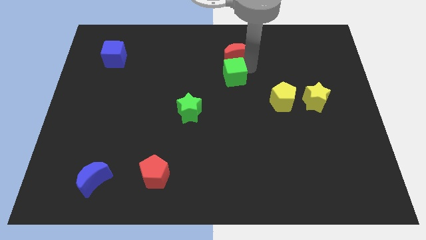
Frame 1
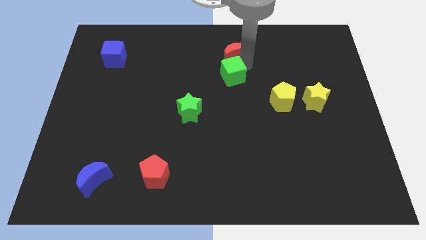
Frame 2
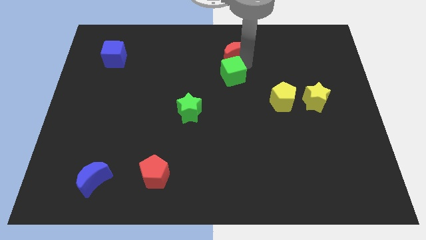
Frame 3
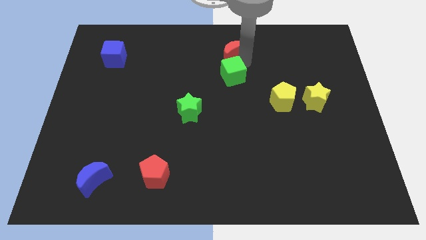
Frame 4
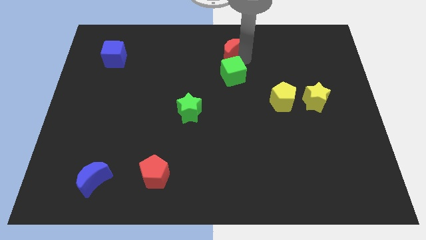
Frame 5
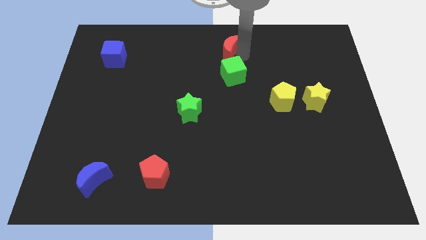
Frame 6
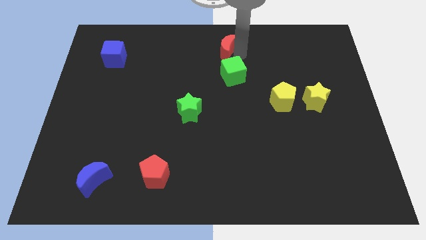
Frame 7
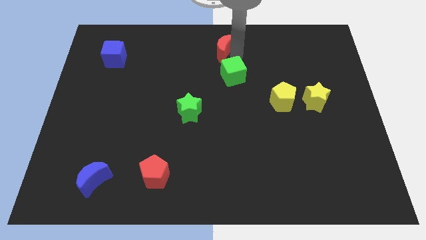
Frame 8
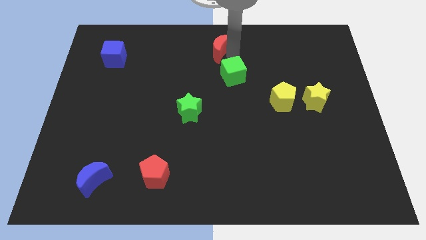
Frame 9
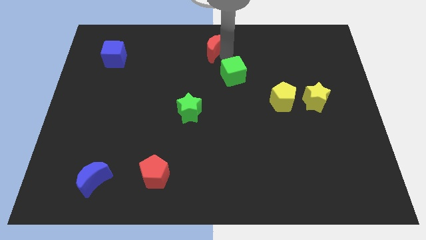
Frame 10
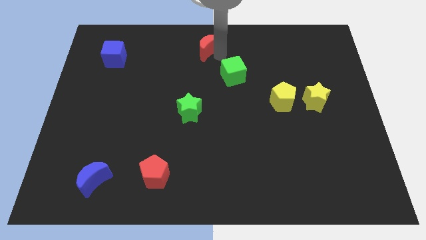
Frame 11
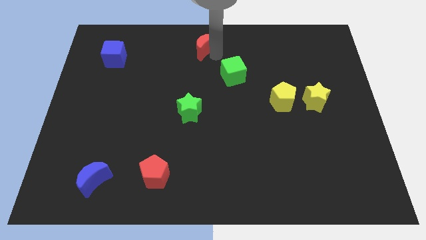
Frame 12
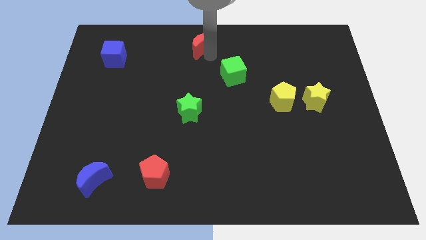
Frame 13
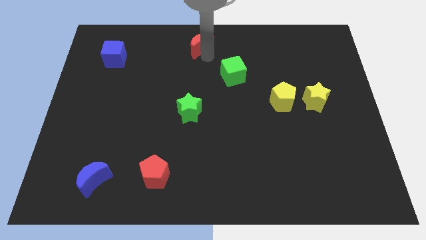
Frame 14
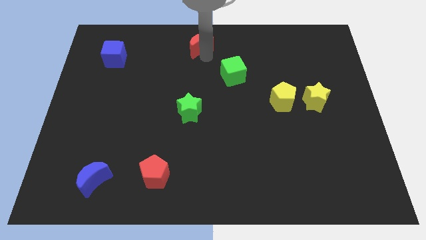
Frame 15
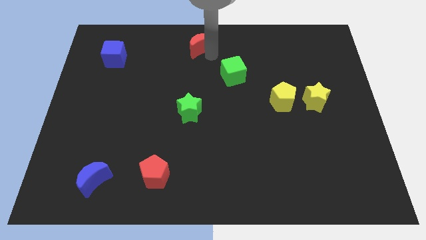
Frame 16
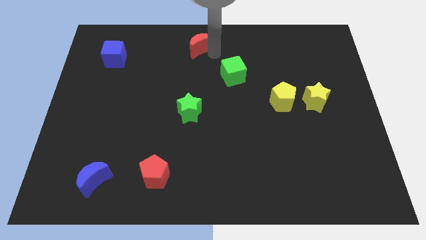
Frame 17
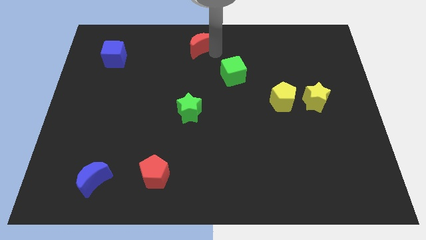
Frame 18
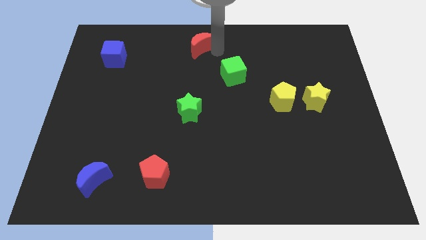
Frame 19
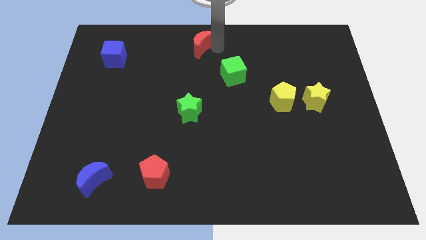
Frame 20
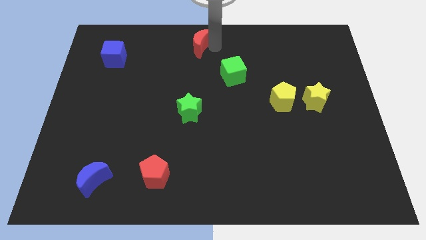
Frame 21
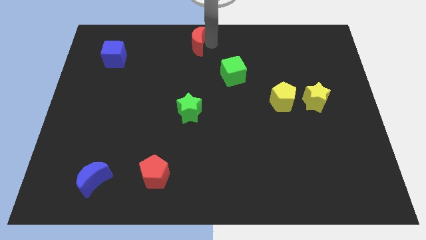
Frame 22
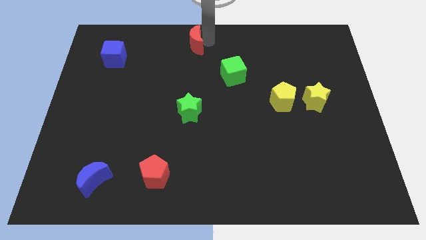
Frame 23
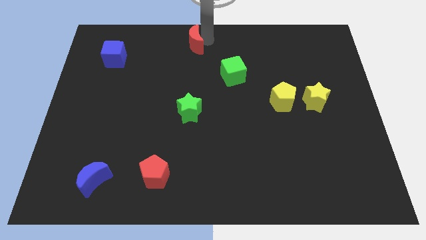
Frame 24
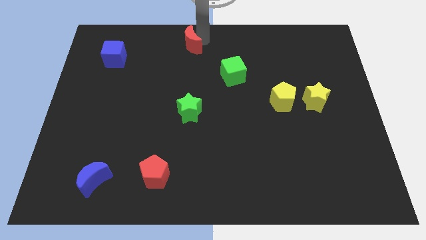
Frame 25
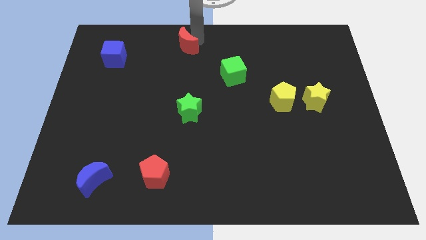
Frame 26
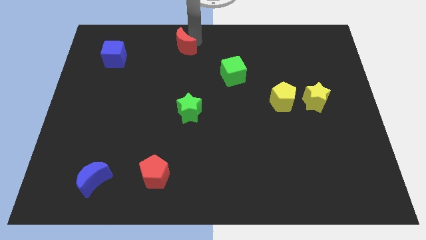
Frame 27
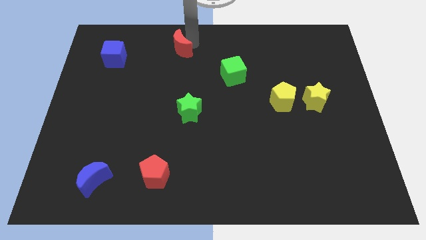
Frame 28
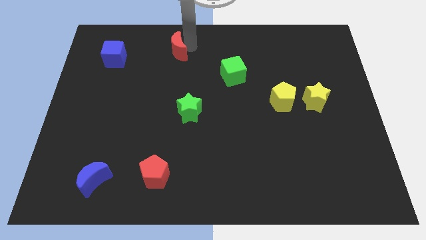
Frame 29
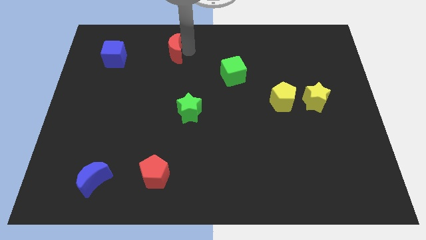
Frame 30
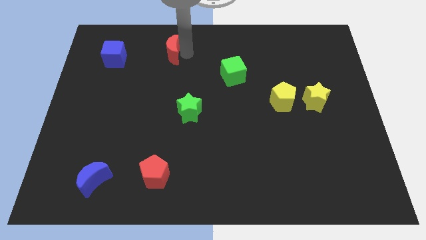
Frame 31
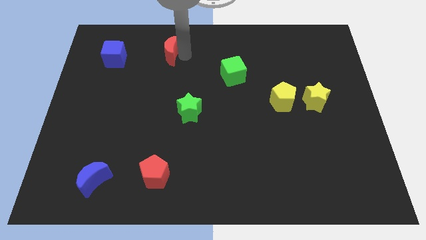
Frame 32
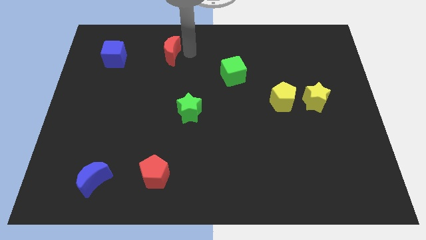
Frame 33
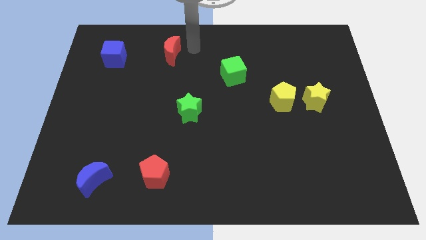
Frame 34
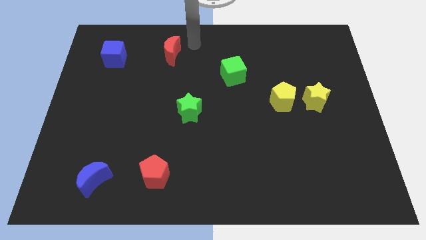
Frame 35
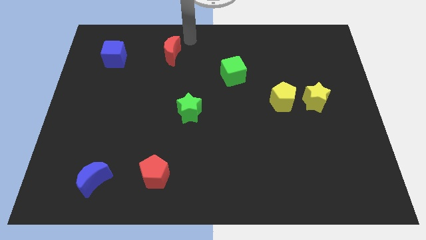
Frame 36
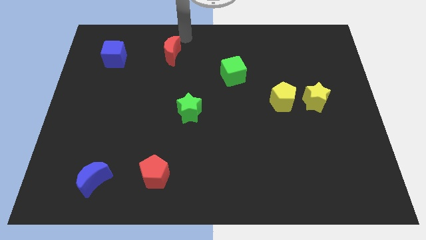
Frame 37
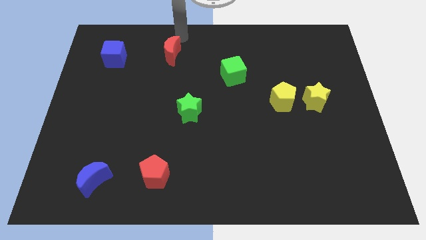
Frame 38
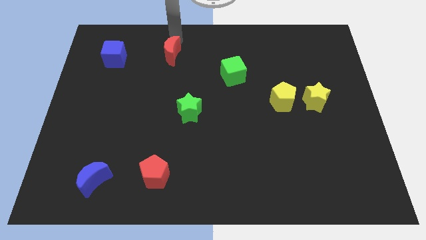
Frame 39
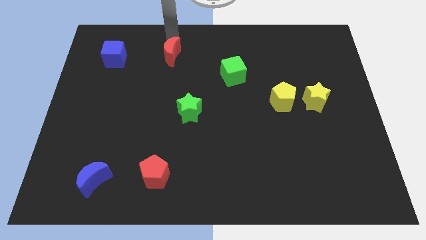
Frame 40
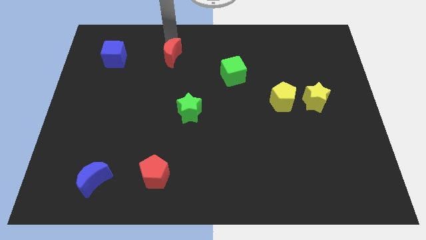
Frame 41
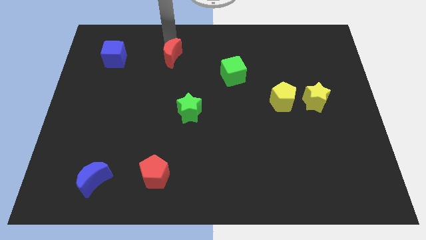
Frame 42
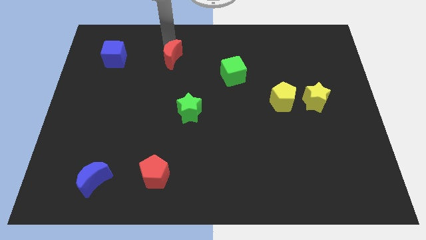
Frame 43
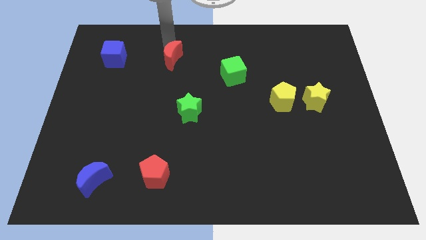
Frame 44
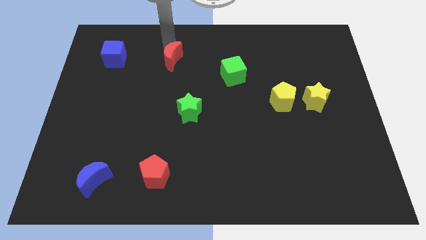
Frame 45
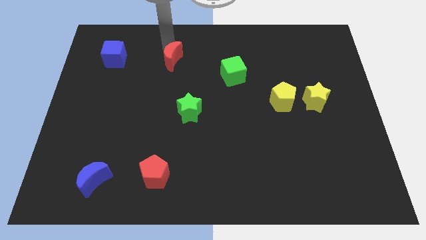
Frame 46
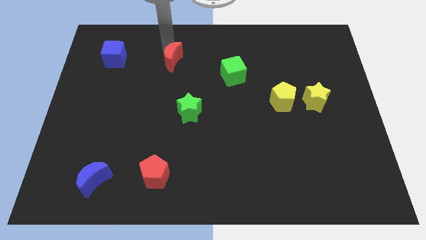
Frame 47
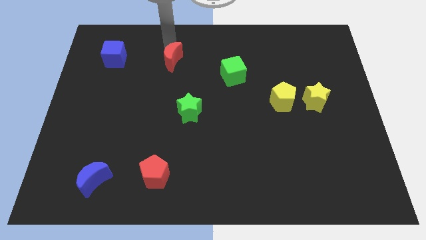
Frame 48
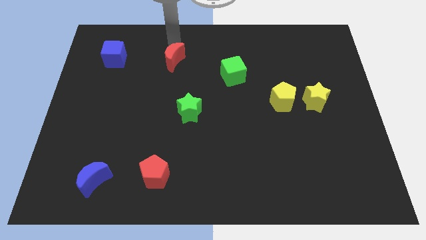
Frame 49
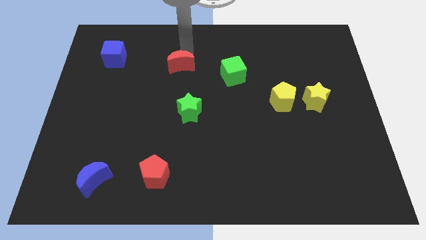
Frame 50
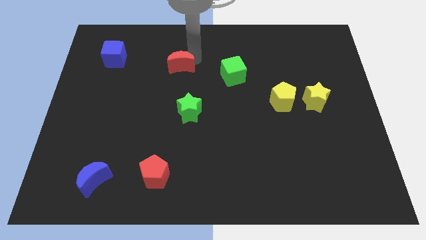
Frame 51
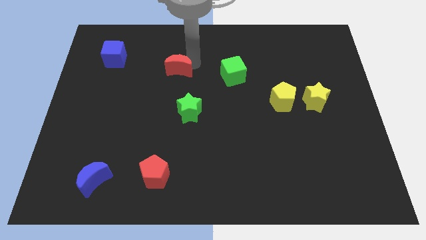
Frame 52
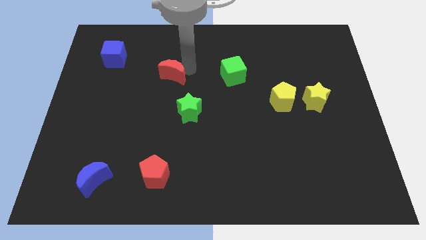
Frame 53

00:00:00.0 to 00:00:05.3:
place the red moon in between the green cube and blue cube

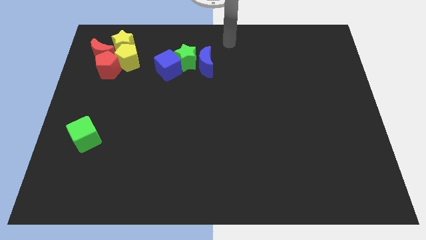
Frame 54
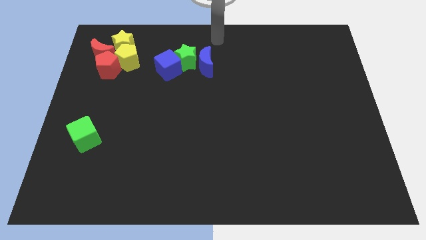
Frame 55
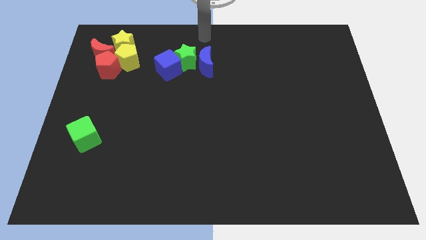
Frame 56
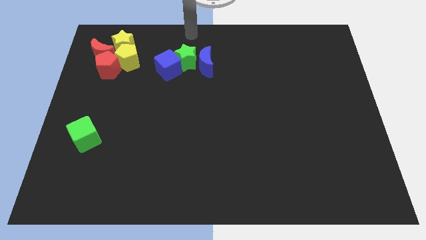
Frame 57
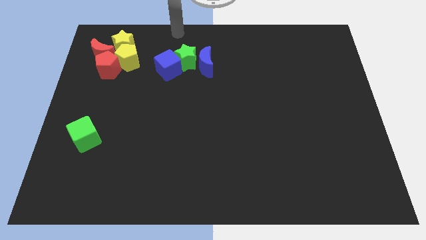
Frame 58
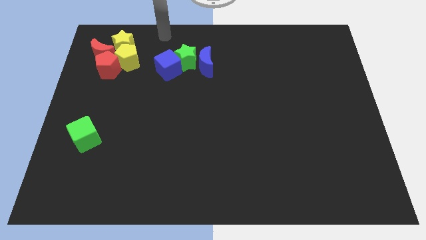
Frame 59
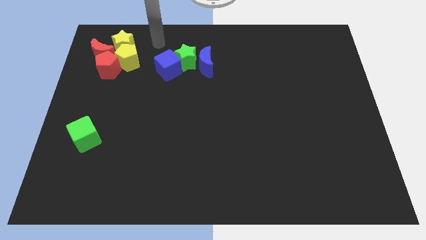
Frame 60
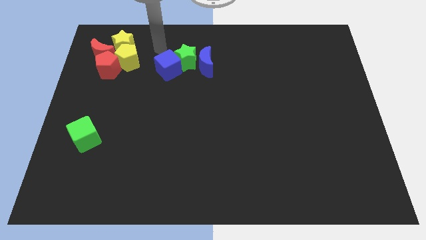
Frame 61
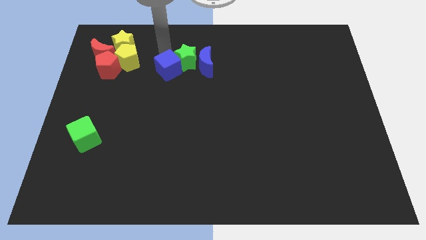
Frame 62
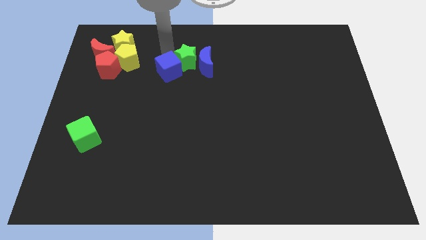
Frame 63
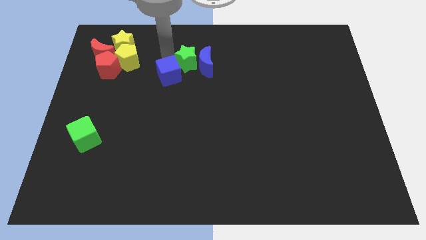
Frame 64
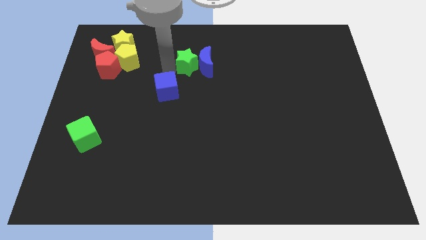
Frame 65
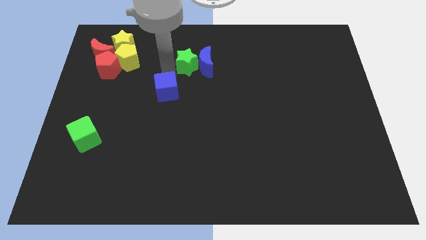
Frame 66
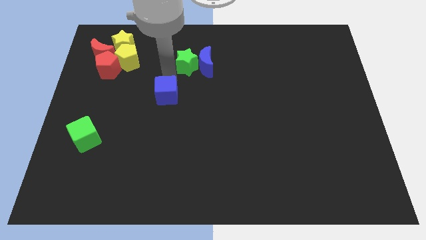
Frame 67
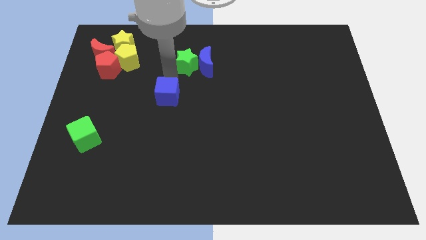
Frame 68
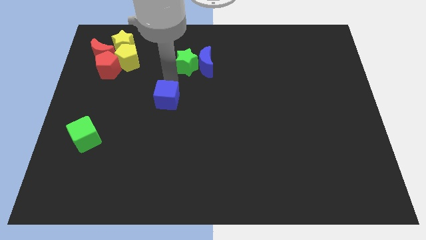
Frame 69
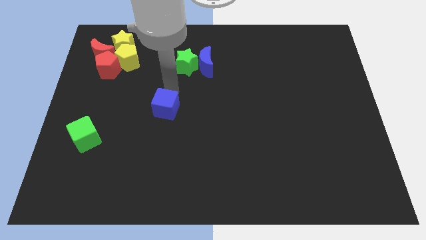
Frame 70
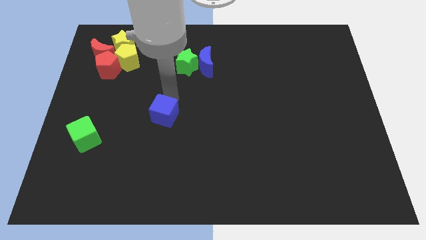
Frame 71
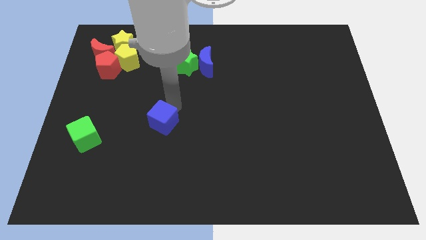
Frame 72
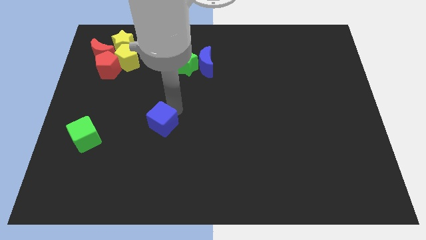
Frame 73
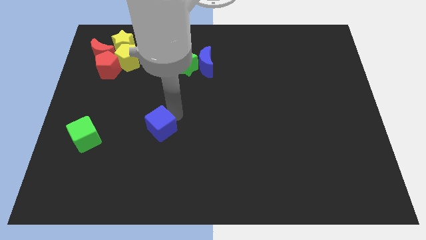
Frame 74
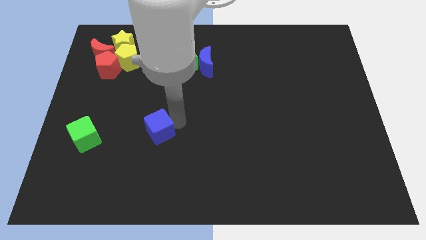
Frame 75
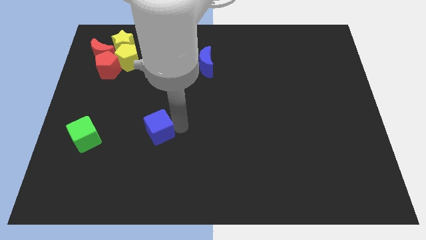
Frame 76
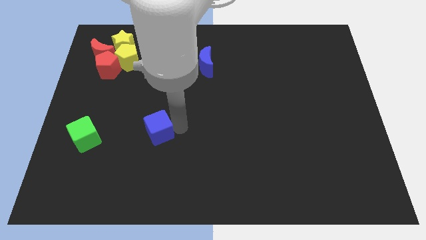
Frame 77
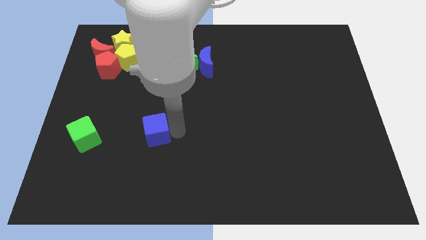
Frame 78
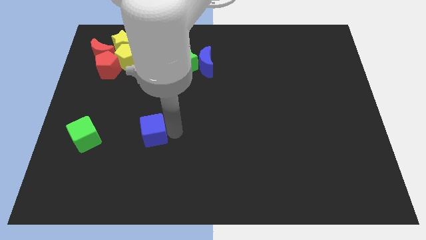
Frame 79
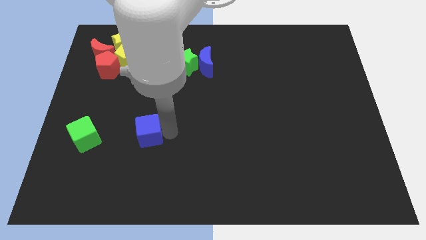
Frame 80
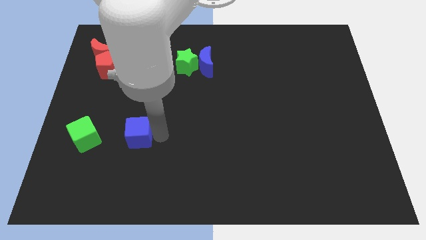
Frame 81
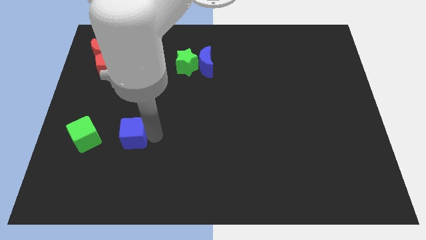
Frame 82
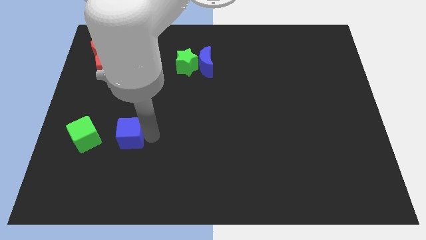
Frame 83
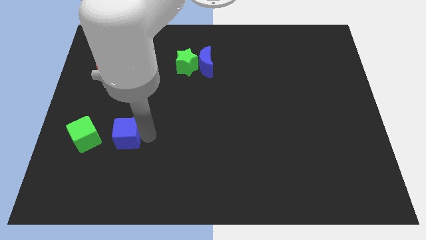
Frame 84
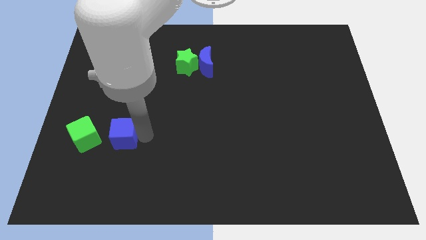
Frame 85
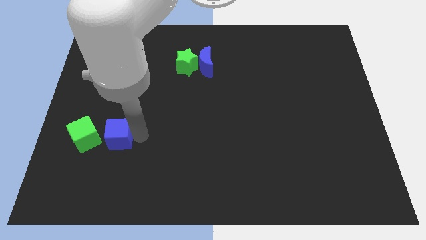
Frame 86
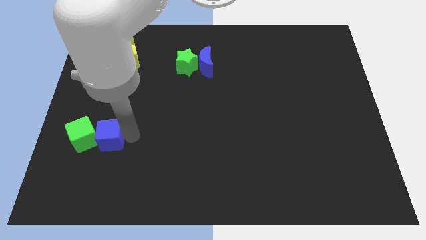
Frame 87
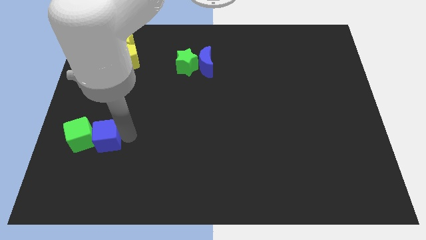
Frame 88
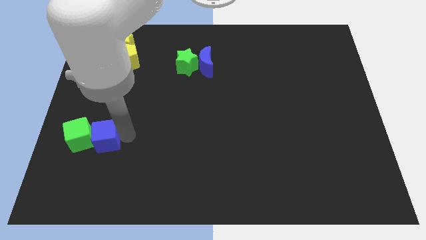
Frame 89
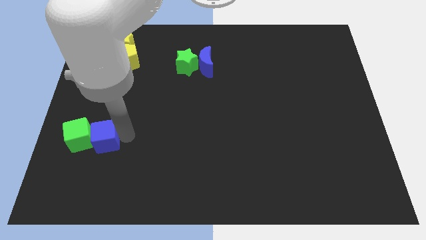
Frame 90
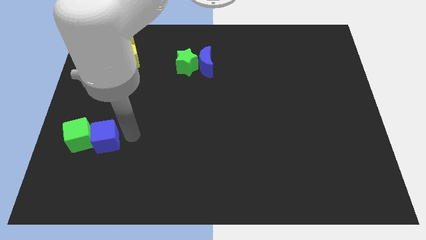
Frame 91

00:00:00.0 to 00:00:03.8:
push the blue cube into the green cube
